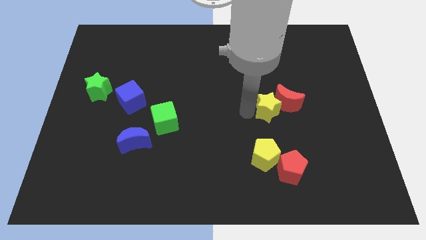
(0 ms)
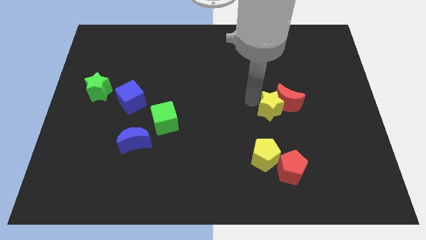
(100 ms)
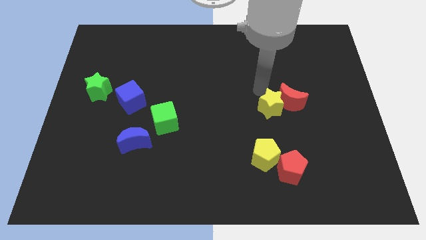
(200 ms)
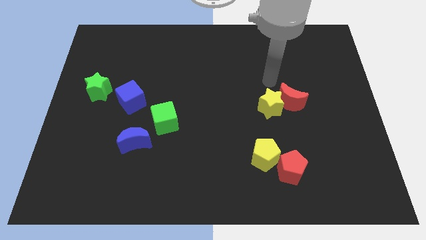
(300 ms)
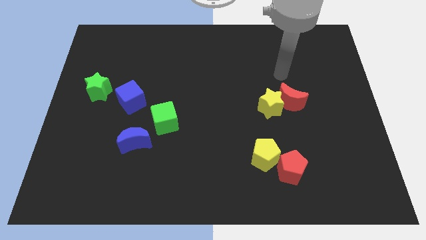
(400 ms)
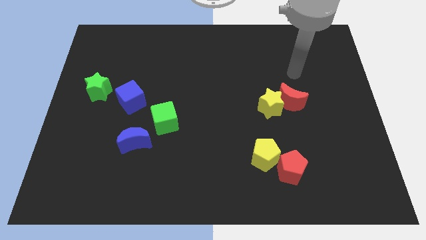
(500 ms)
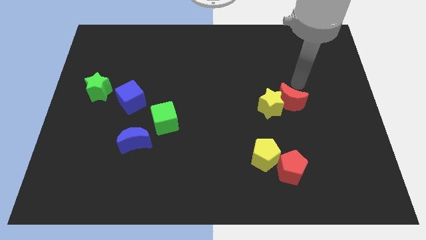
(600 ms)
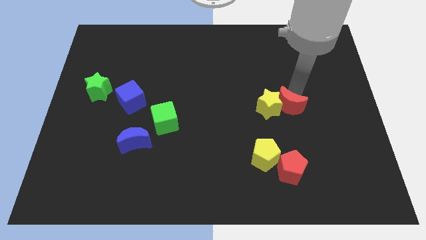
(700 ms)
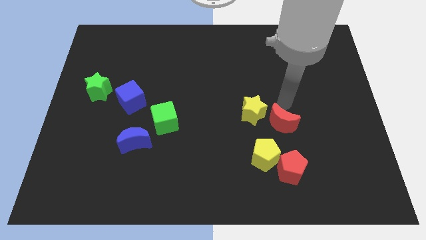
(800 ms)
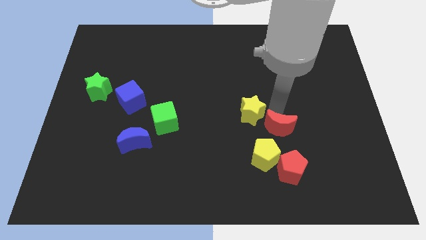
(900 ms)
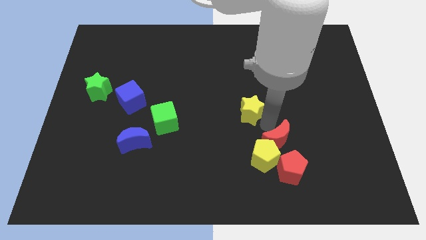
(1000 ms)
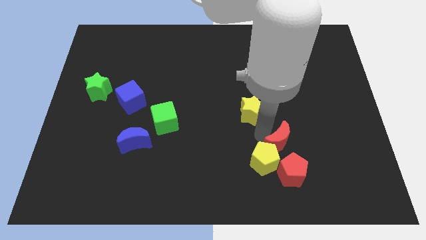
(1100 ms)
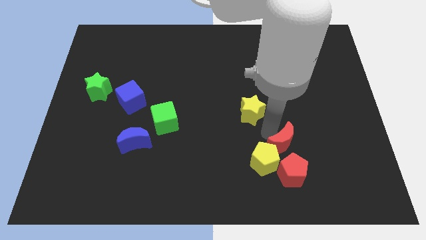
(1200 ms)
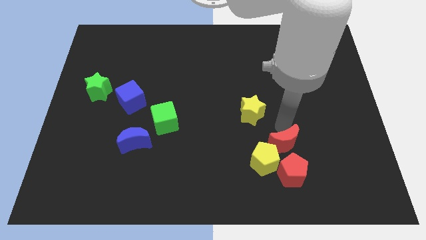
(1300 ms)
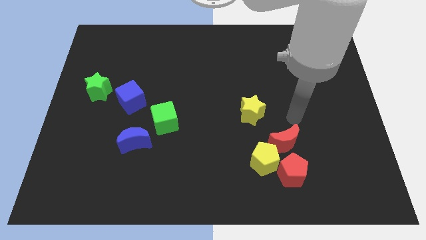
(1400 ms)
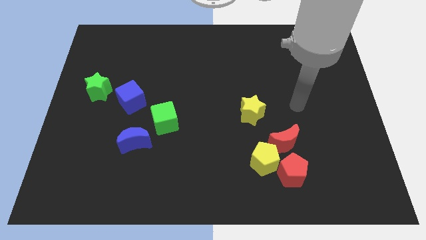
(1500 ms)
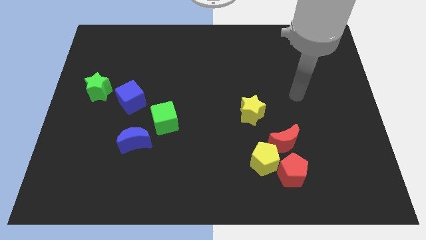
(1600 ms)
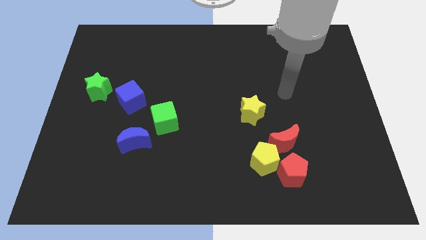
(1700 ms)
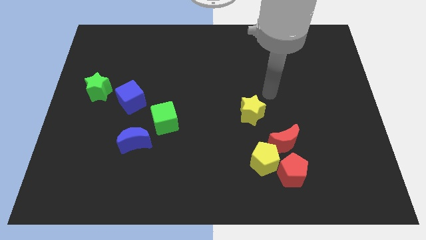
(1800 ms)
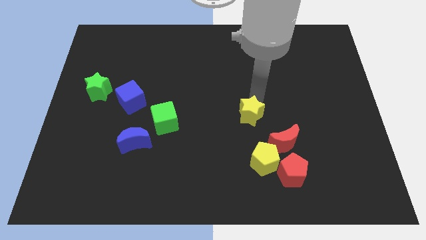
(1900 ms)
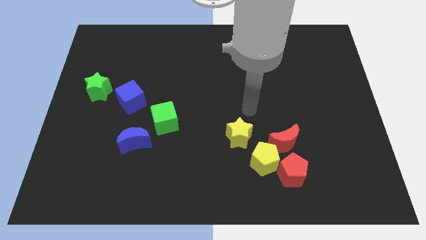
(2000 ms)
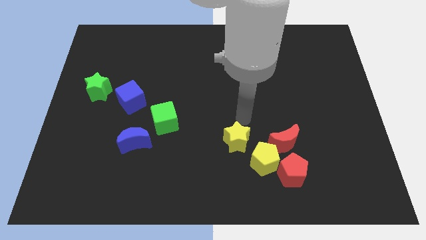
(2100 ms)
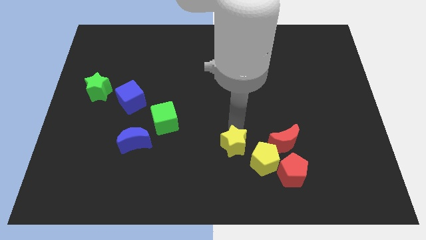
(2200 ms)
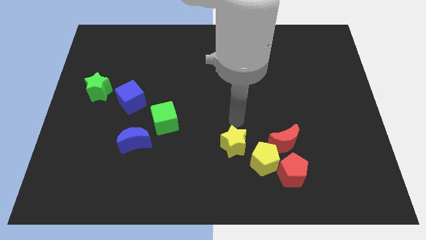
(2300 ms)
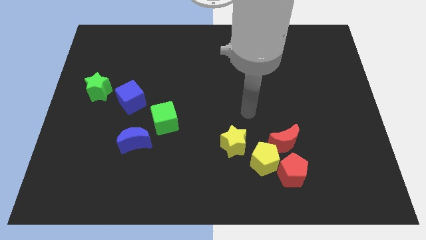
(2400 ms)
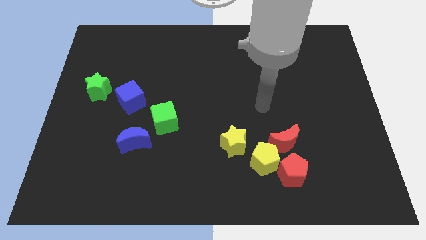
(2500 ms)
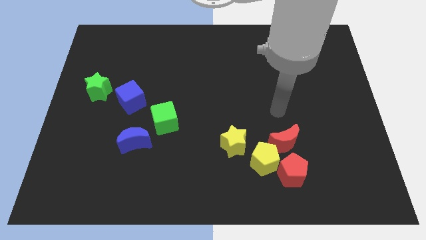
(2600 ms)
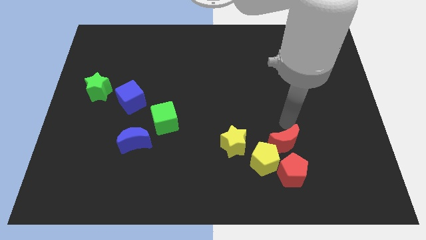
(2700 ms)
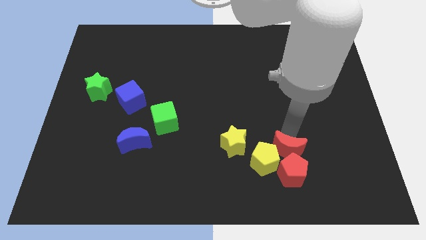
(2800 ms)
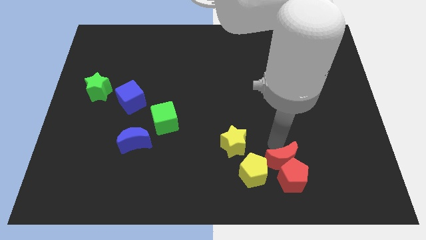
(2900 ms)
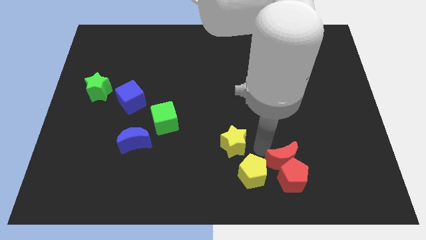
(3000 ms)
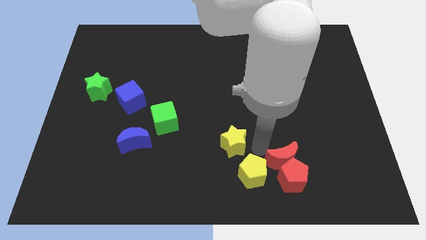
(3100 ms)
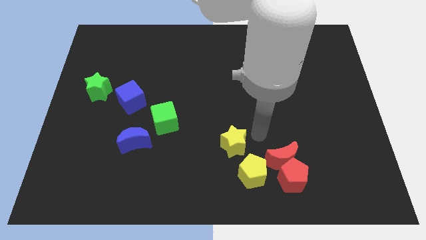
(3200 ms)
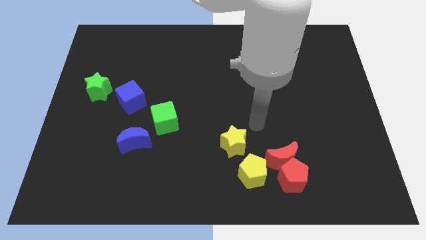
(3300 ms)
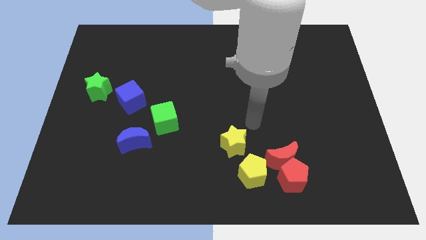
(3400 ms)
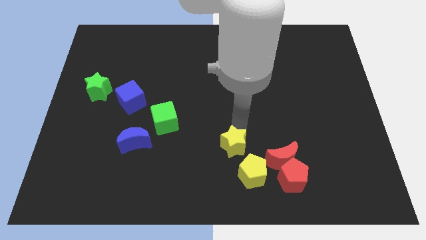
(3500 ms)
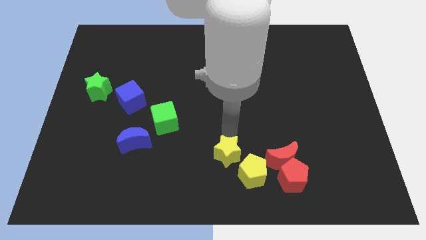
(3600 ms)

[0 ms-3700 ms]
place yellow star and red moon towards red and yellow pentagons

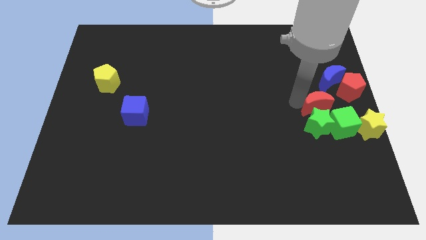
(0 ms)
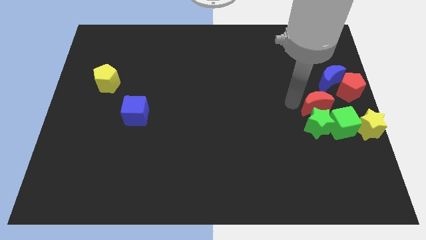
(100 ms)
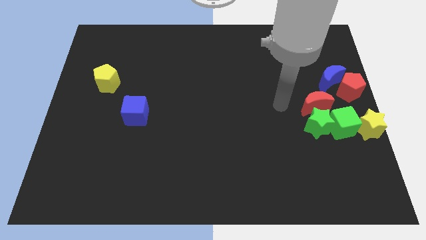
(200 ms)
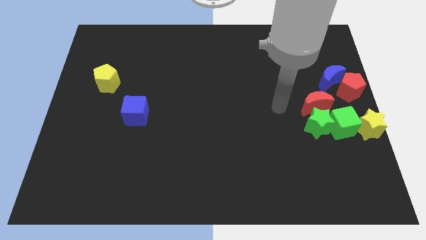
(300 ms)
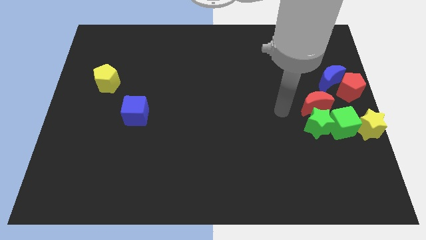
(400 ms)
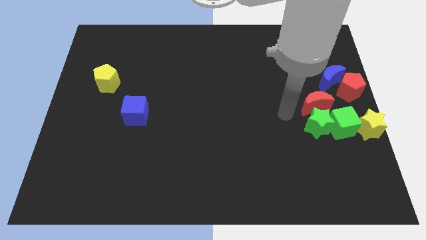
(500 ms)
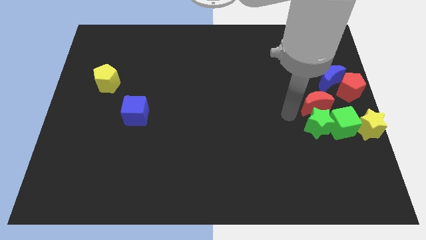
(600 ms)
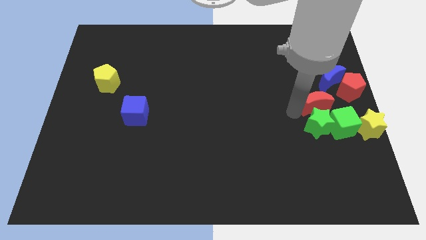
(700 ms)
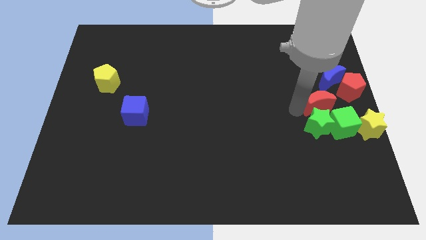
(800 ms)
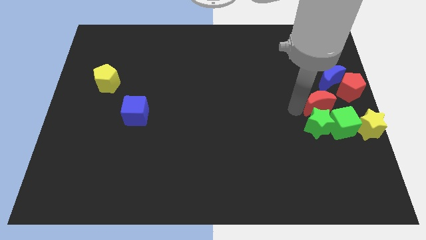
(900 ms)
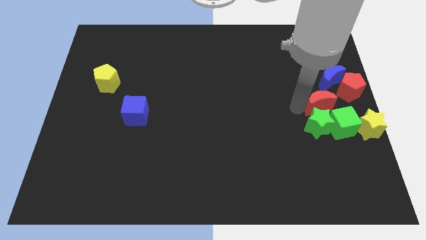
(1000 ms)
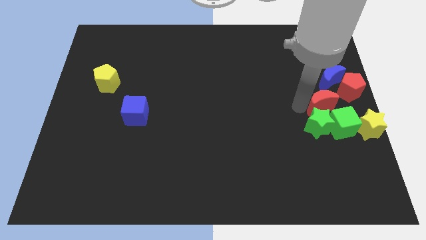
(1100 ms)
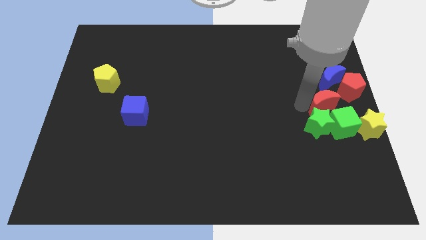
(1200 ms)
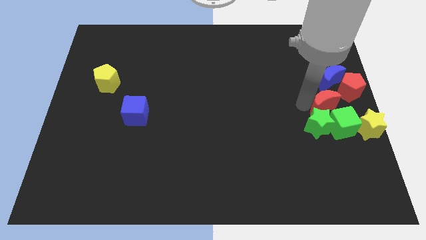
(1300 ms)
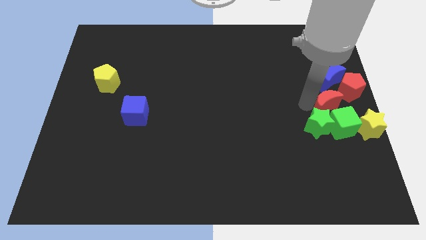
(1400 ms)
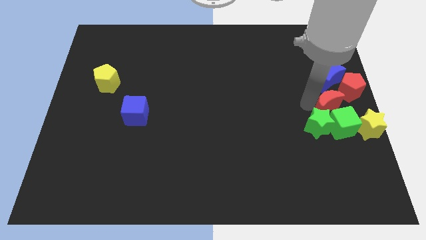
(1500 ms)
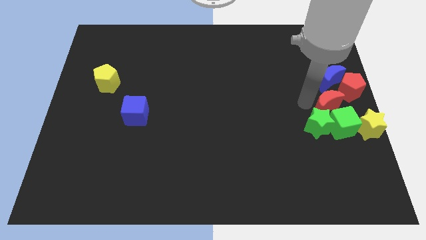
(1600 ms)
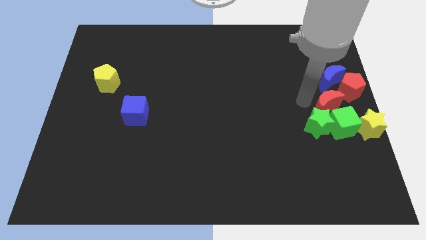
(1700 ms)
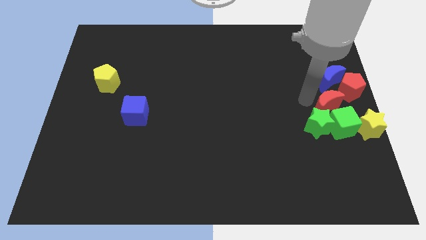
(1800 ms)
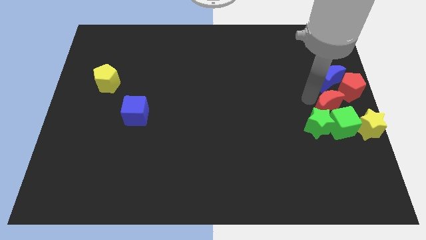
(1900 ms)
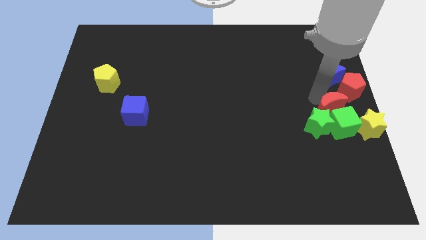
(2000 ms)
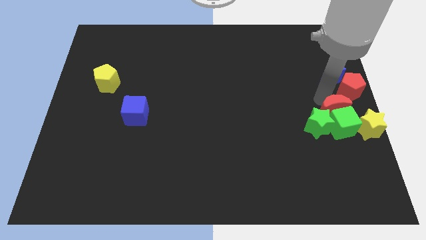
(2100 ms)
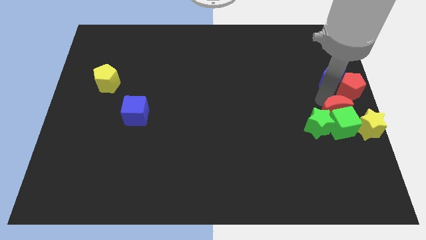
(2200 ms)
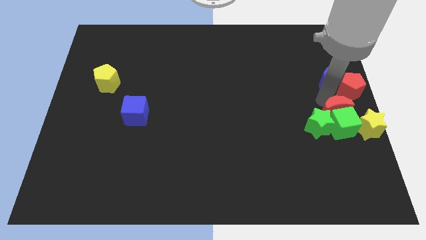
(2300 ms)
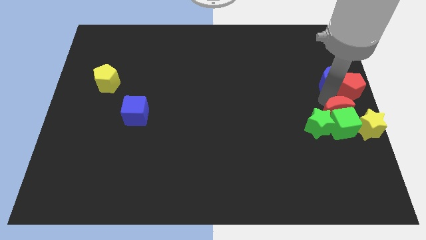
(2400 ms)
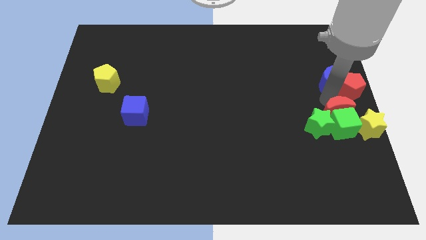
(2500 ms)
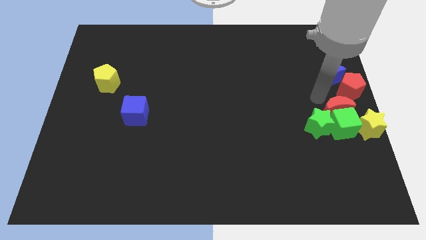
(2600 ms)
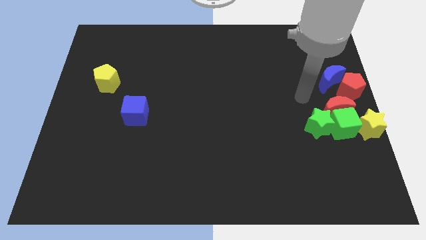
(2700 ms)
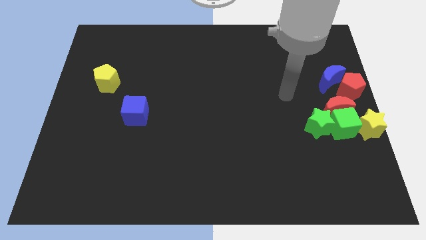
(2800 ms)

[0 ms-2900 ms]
push the red crescent to the top of the green cube

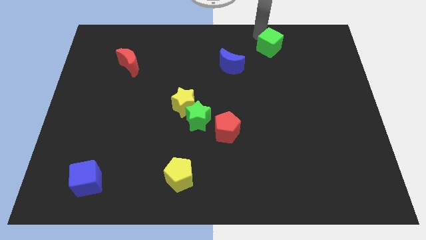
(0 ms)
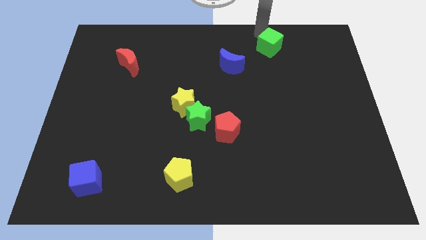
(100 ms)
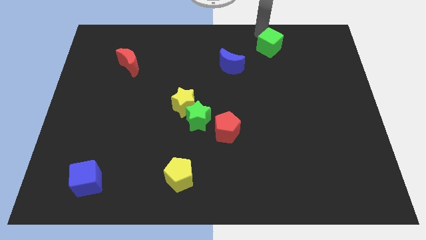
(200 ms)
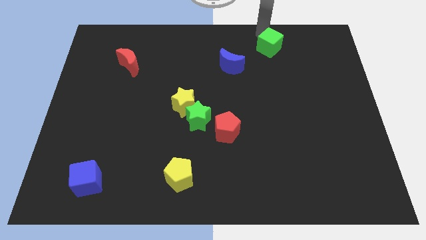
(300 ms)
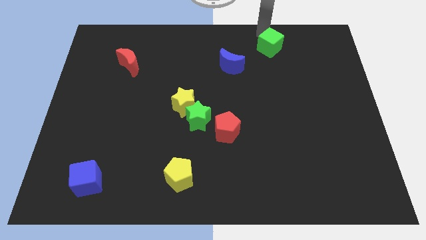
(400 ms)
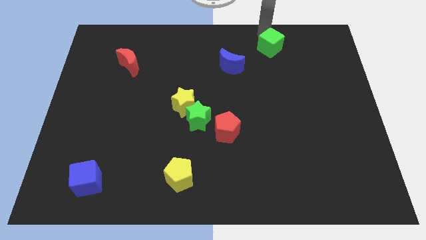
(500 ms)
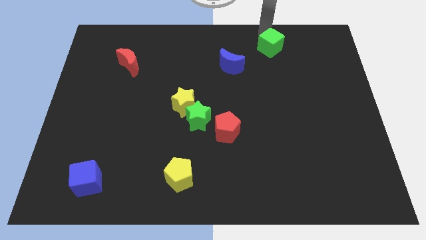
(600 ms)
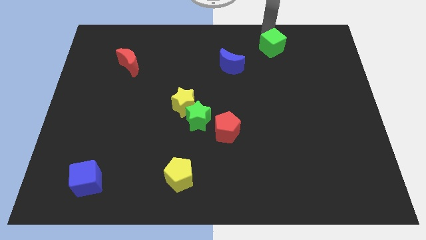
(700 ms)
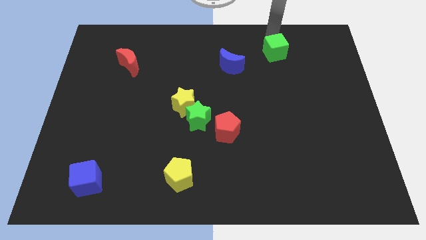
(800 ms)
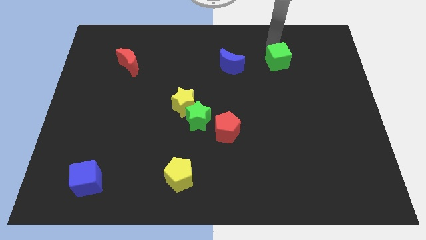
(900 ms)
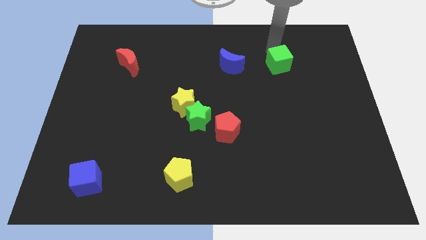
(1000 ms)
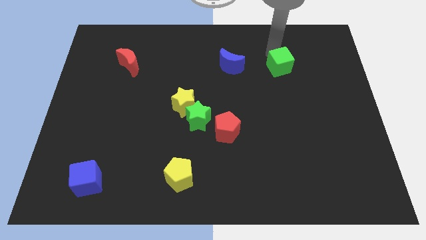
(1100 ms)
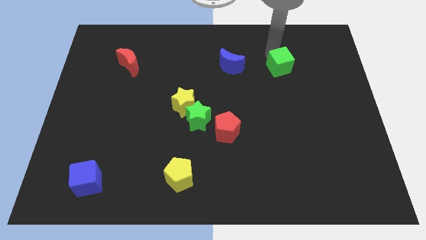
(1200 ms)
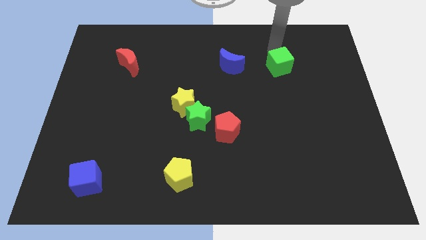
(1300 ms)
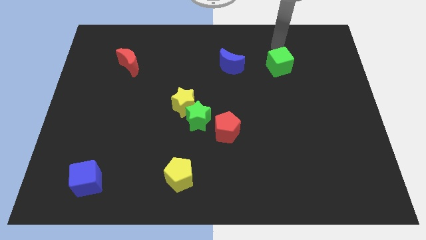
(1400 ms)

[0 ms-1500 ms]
move the green cube horizontally to the right side of the blue crescent

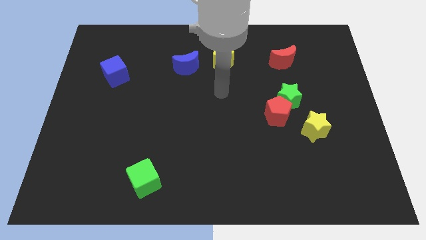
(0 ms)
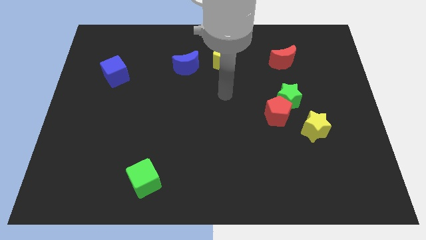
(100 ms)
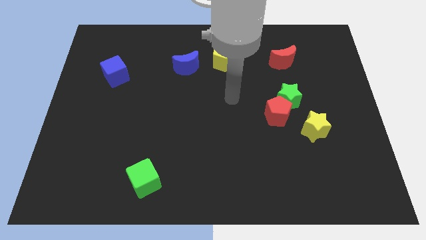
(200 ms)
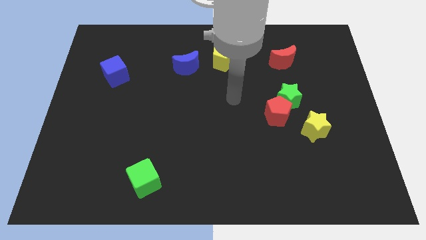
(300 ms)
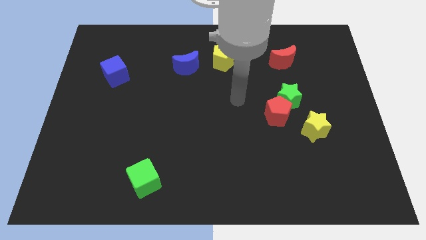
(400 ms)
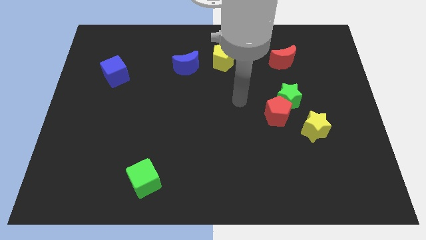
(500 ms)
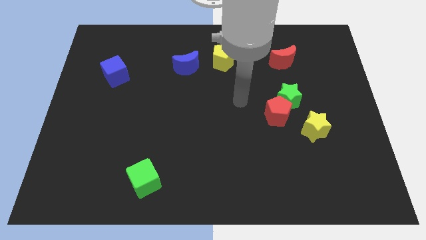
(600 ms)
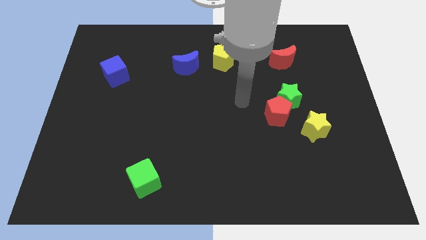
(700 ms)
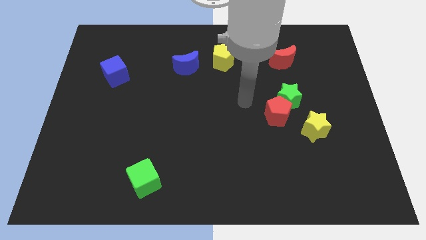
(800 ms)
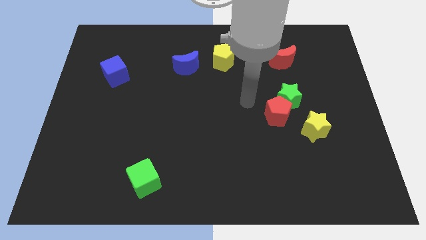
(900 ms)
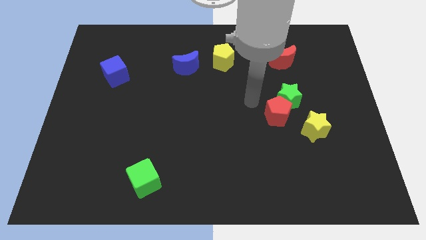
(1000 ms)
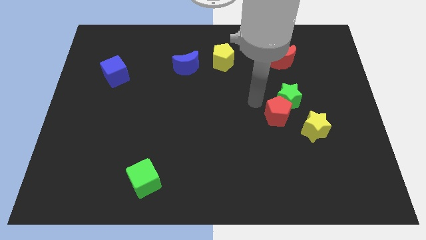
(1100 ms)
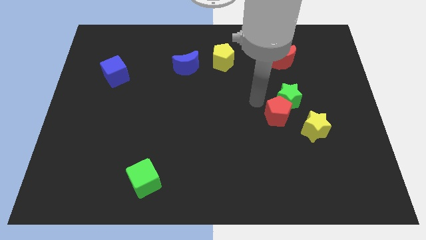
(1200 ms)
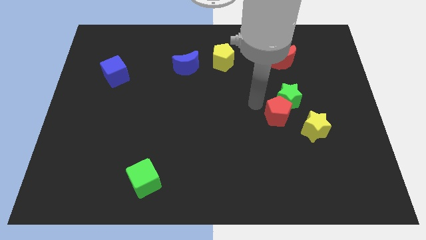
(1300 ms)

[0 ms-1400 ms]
move your arm close to the top left of the red pentagon
